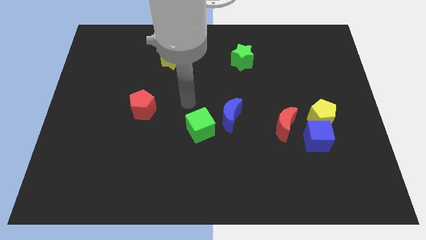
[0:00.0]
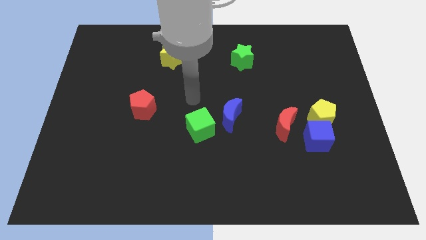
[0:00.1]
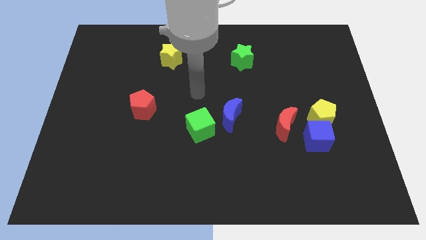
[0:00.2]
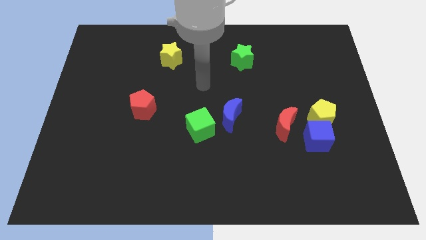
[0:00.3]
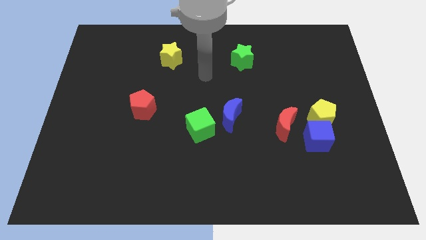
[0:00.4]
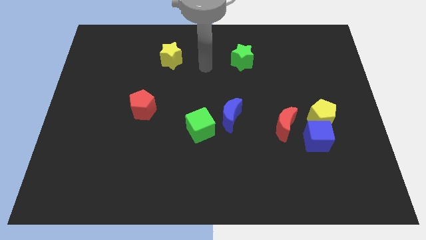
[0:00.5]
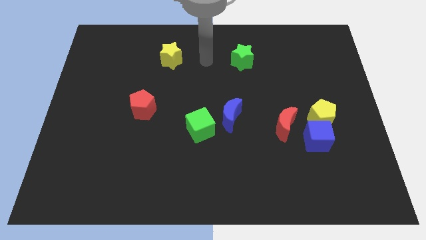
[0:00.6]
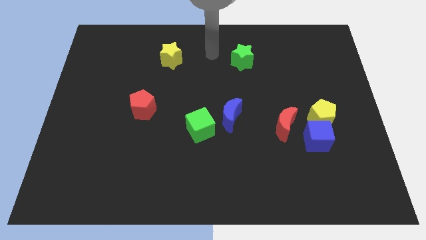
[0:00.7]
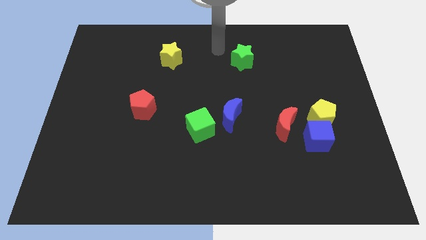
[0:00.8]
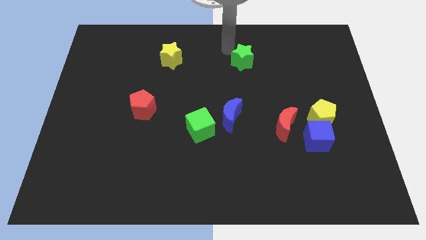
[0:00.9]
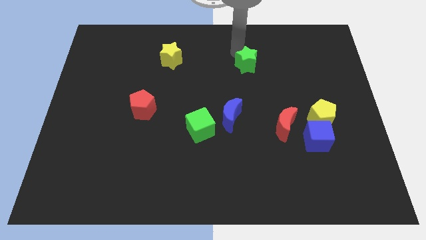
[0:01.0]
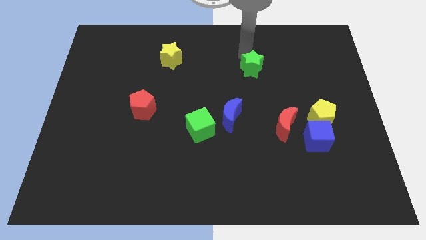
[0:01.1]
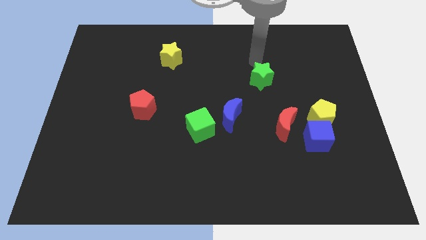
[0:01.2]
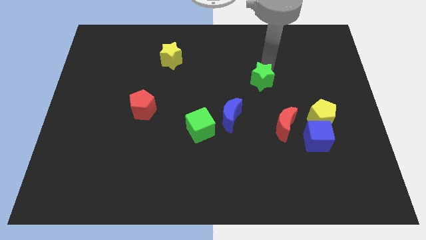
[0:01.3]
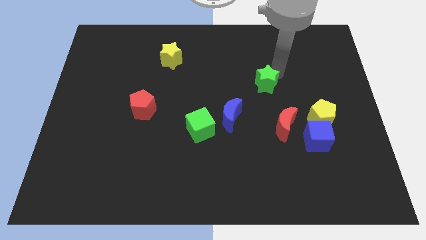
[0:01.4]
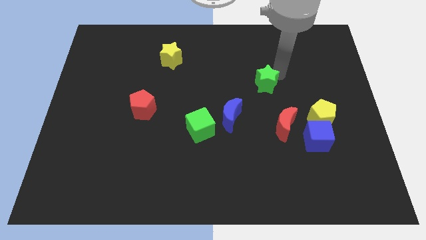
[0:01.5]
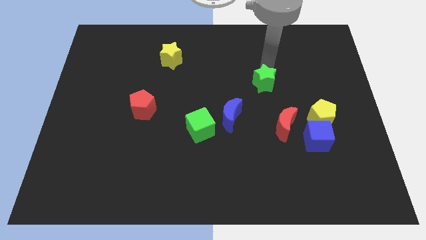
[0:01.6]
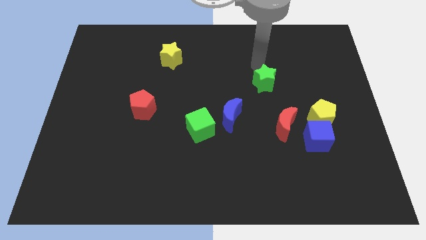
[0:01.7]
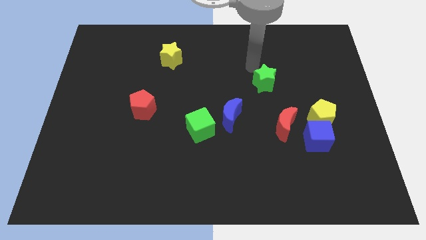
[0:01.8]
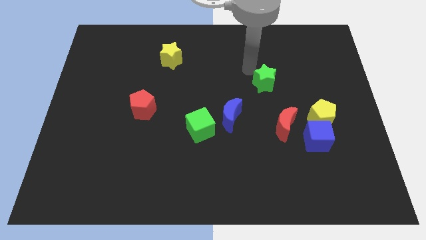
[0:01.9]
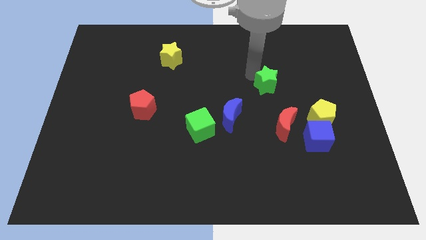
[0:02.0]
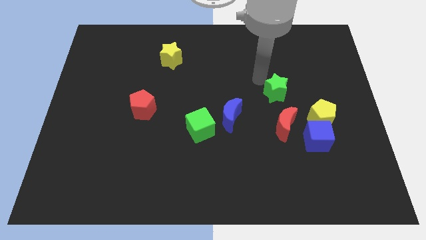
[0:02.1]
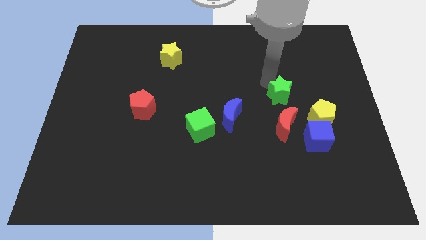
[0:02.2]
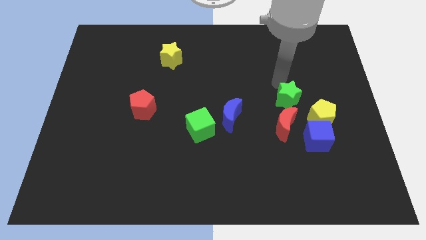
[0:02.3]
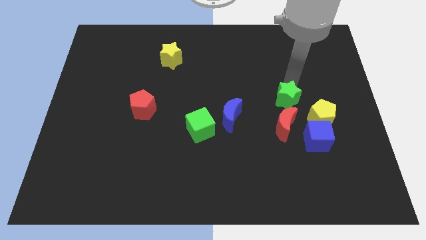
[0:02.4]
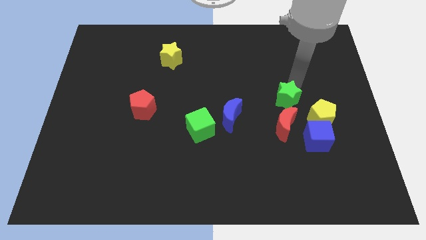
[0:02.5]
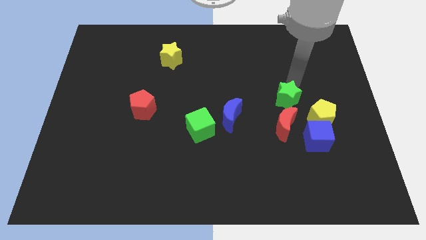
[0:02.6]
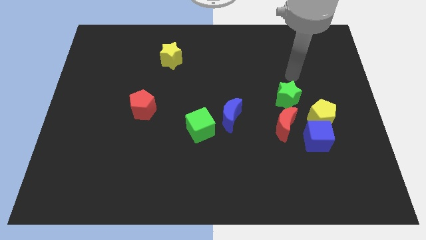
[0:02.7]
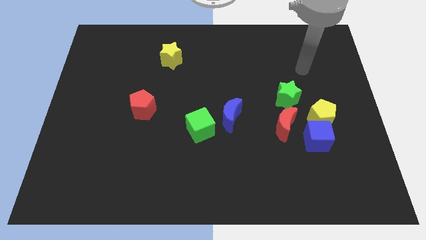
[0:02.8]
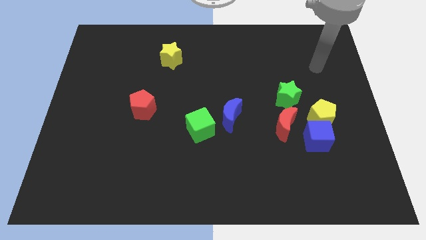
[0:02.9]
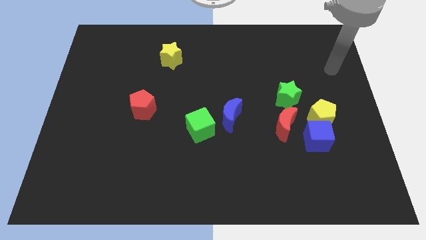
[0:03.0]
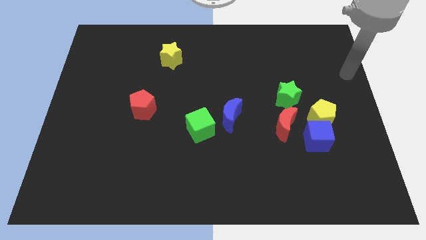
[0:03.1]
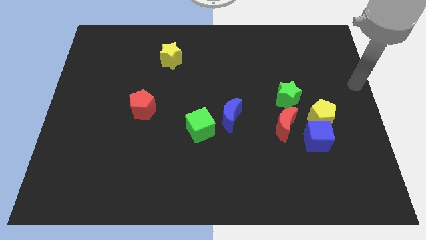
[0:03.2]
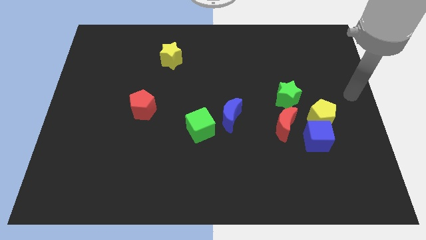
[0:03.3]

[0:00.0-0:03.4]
push the green star to the red crescent

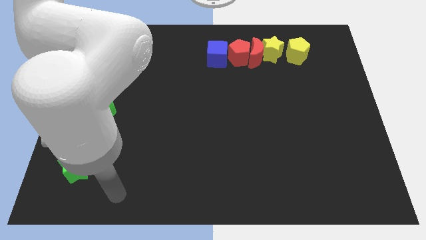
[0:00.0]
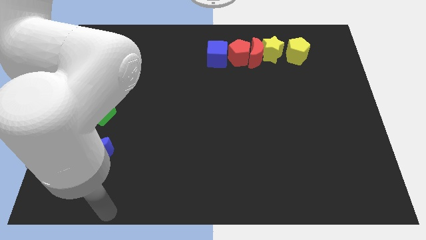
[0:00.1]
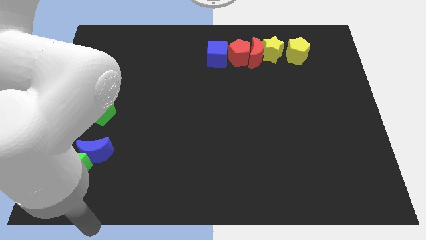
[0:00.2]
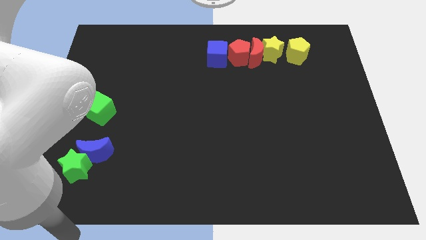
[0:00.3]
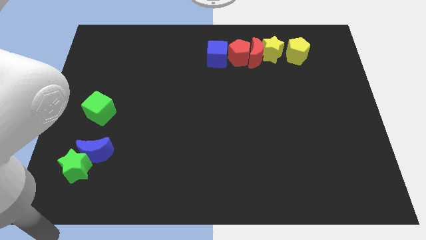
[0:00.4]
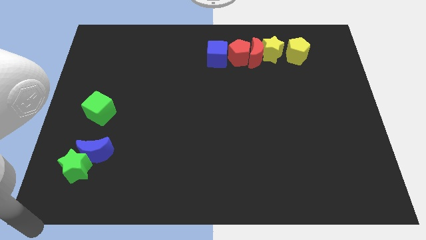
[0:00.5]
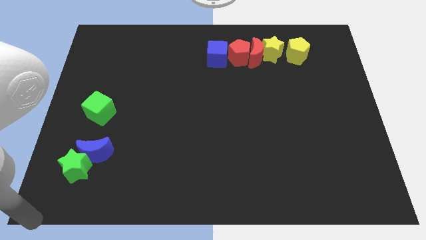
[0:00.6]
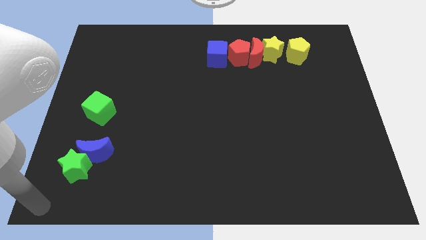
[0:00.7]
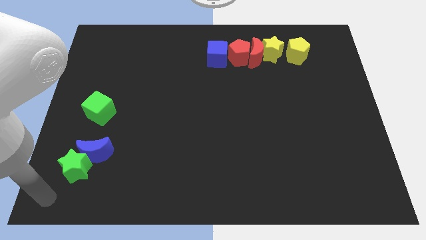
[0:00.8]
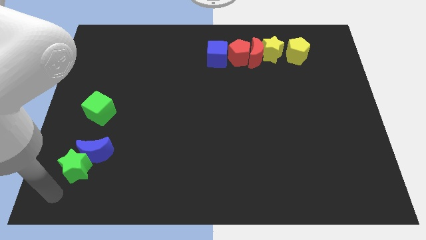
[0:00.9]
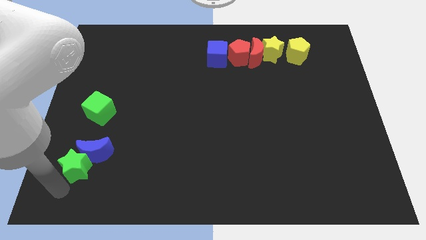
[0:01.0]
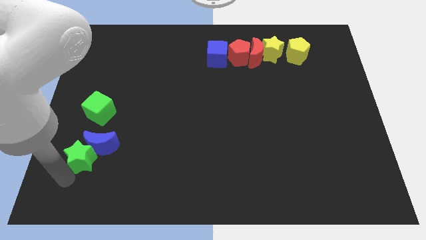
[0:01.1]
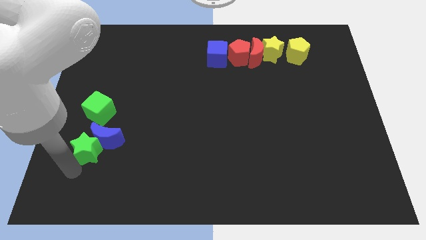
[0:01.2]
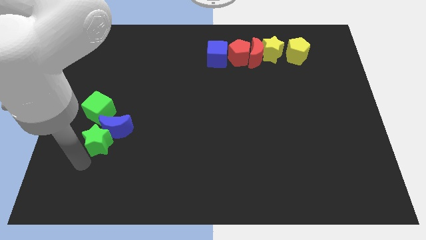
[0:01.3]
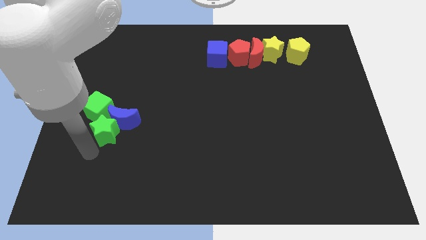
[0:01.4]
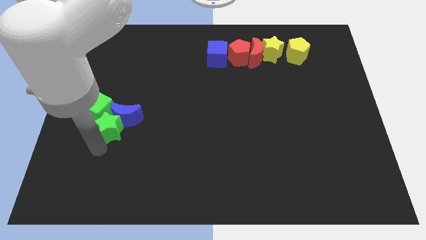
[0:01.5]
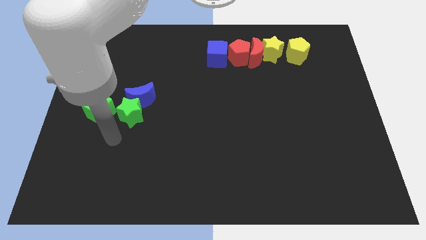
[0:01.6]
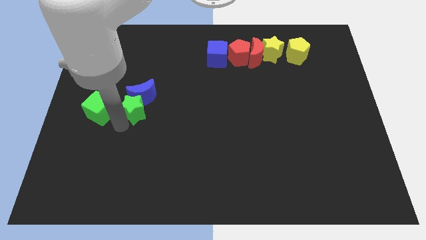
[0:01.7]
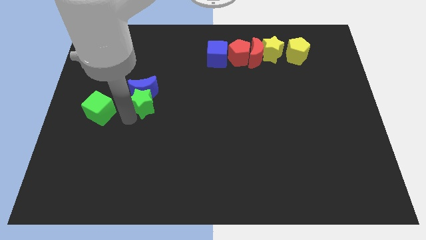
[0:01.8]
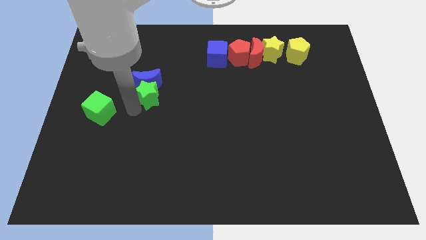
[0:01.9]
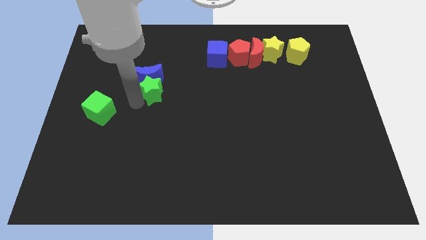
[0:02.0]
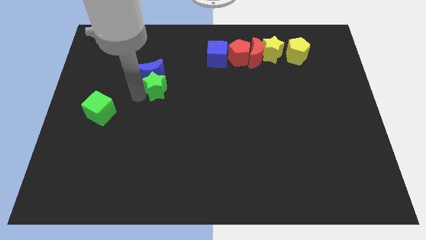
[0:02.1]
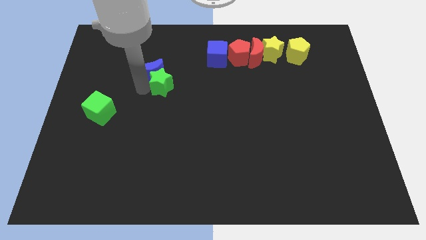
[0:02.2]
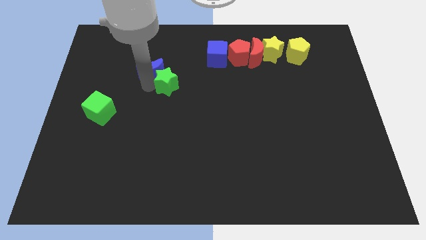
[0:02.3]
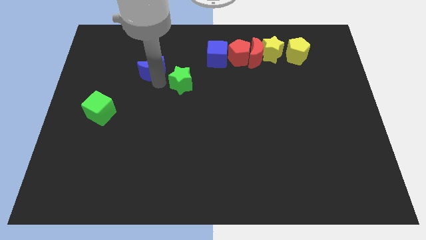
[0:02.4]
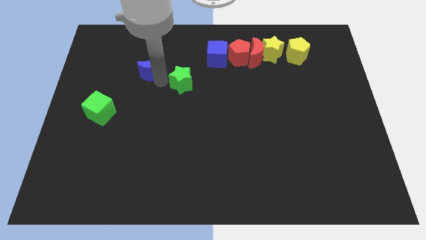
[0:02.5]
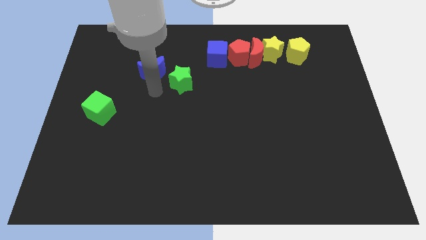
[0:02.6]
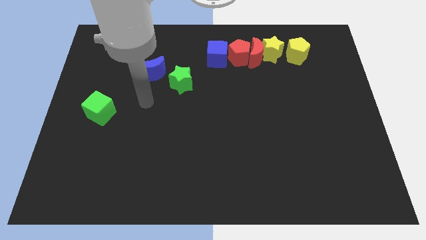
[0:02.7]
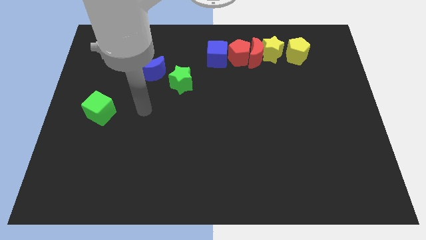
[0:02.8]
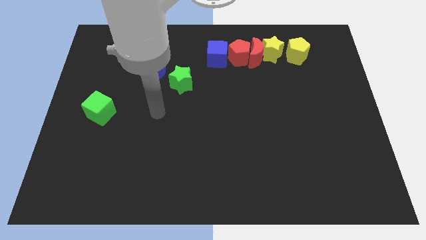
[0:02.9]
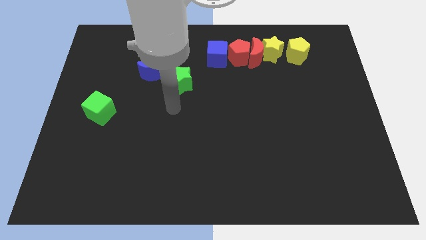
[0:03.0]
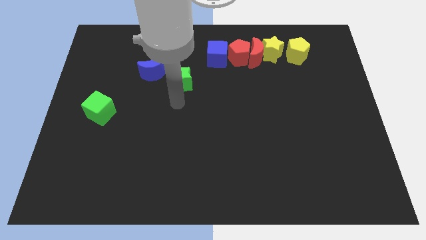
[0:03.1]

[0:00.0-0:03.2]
drag the green star and blue crescent towards top

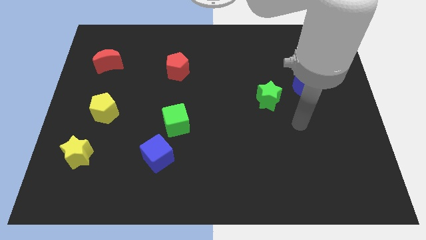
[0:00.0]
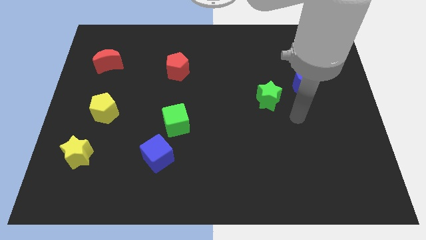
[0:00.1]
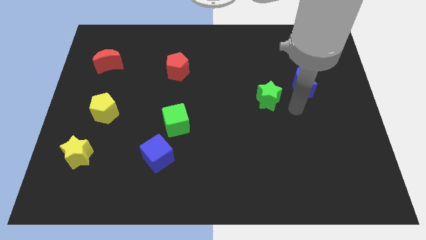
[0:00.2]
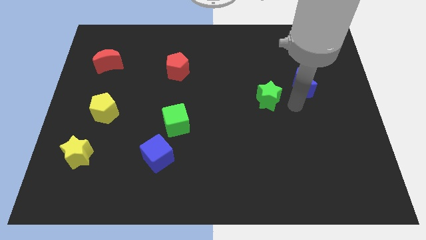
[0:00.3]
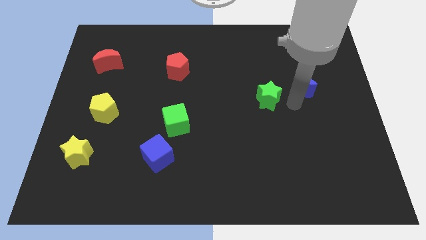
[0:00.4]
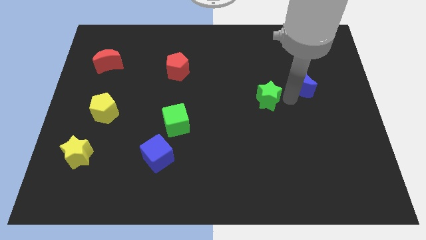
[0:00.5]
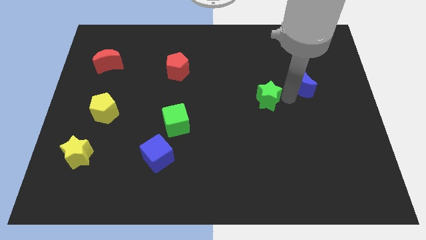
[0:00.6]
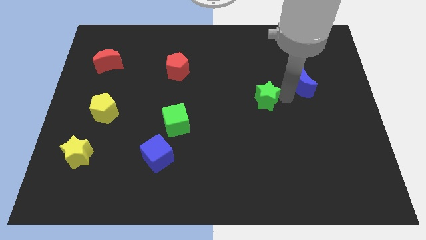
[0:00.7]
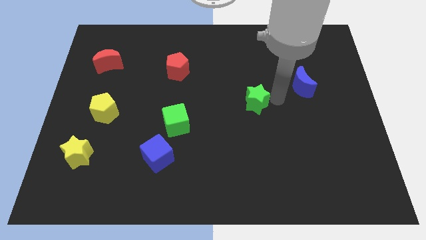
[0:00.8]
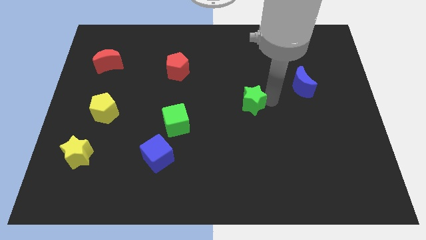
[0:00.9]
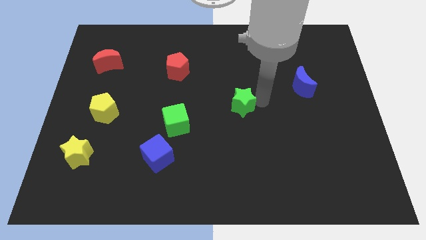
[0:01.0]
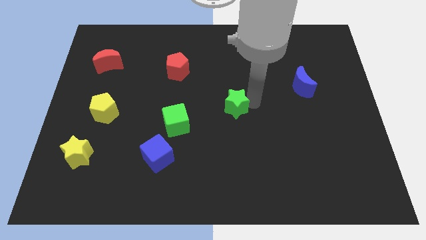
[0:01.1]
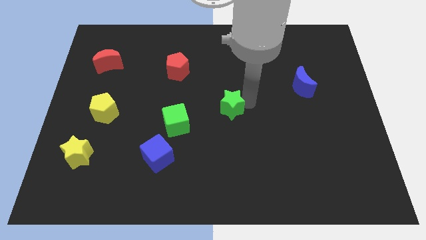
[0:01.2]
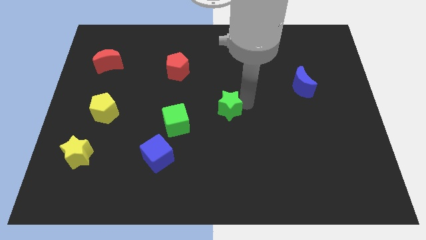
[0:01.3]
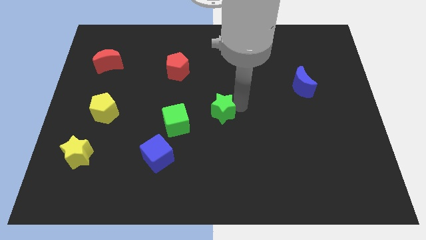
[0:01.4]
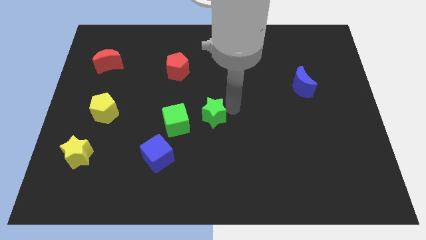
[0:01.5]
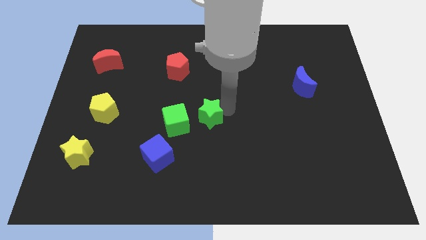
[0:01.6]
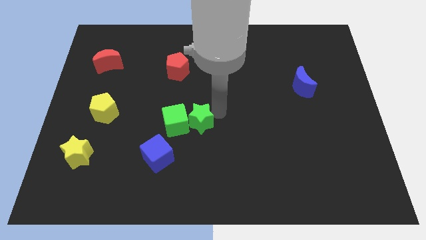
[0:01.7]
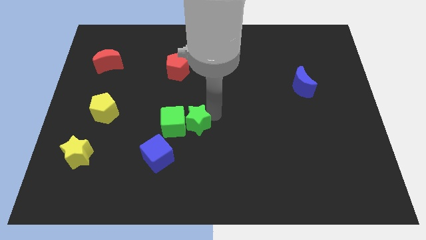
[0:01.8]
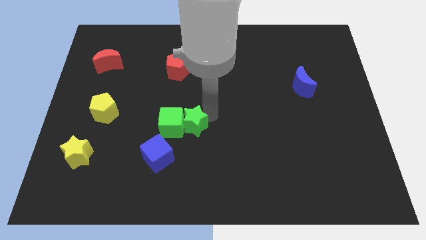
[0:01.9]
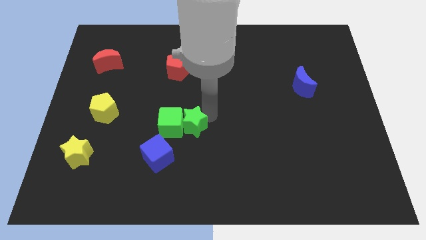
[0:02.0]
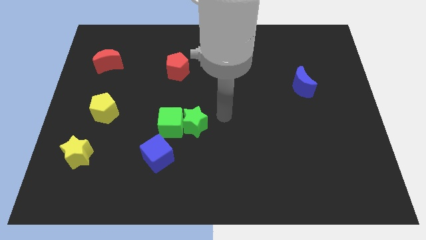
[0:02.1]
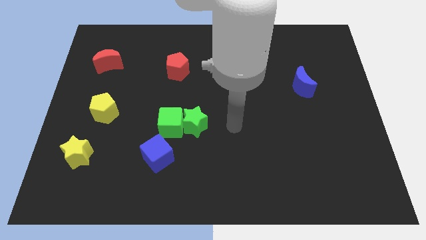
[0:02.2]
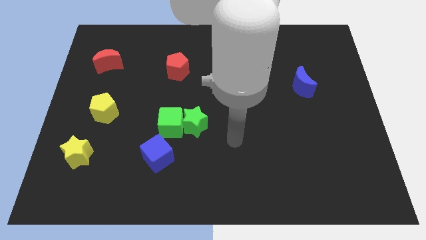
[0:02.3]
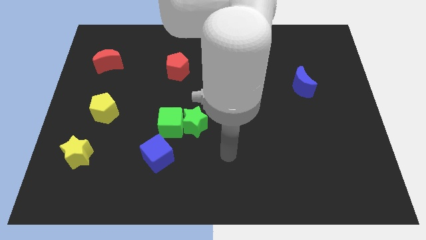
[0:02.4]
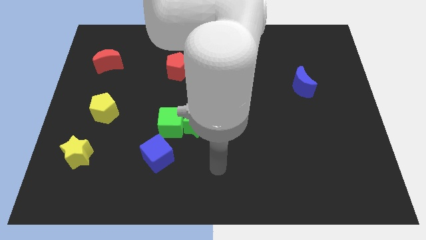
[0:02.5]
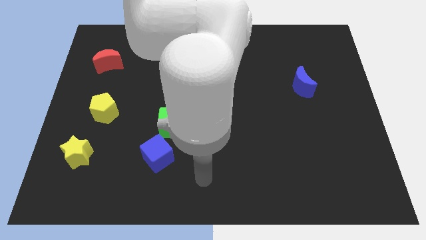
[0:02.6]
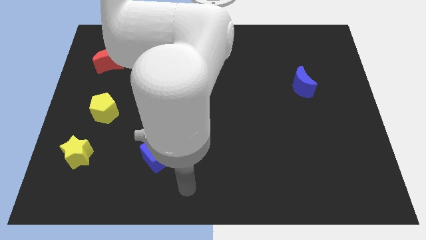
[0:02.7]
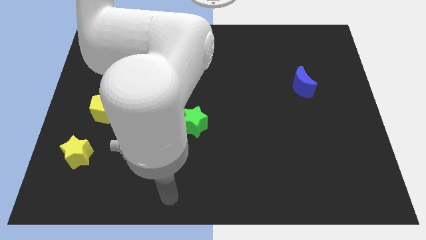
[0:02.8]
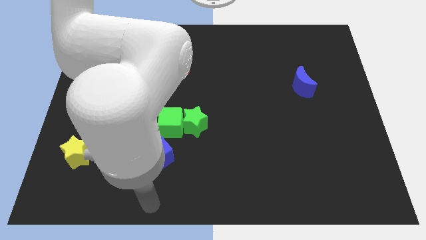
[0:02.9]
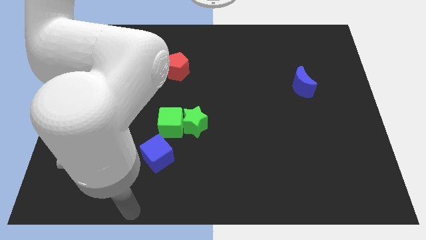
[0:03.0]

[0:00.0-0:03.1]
move green star near to green cube
